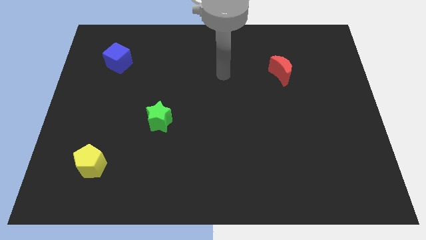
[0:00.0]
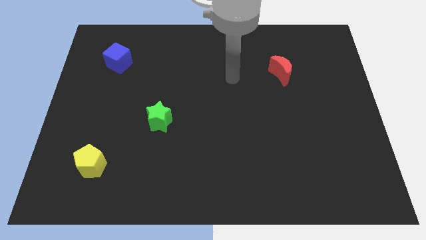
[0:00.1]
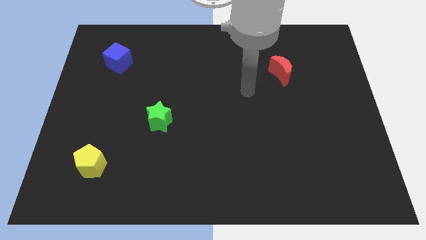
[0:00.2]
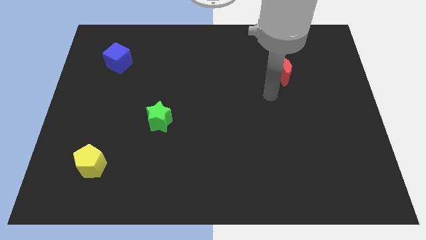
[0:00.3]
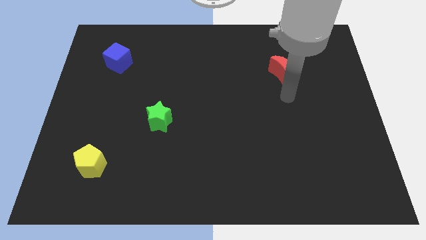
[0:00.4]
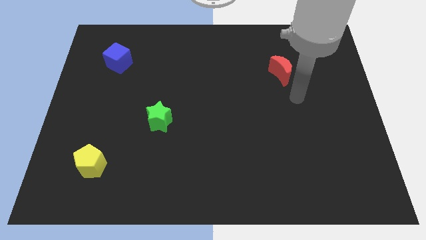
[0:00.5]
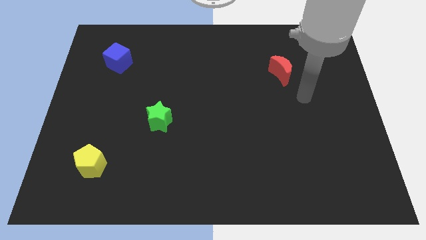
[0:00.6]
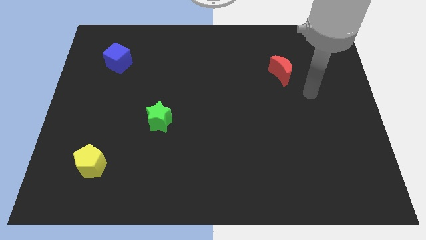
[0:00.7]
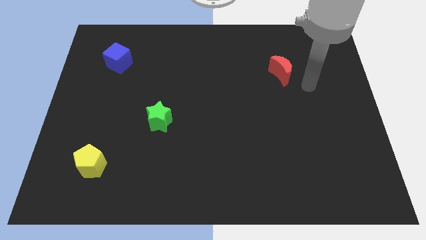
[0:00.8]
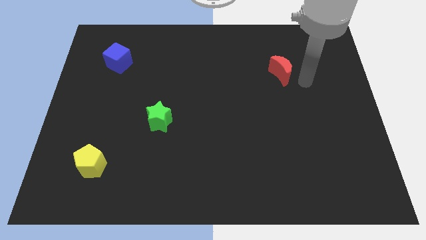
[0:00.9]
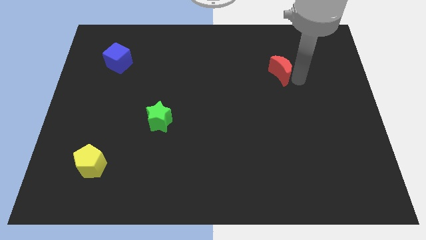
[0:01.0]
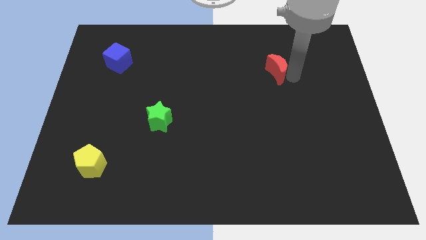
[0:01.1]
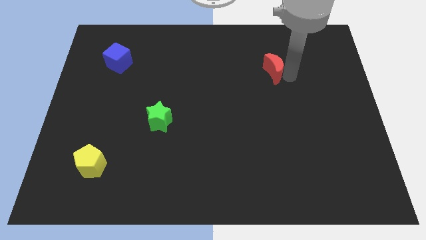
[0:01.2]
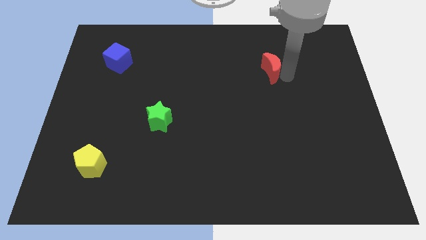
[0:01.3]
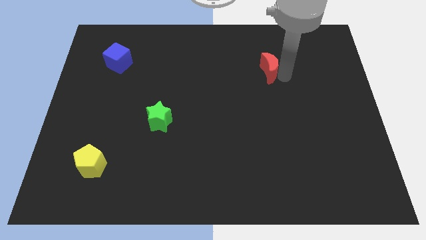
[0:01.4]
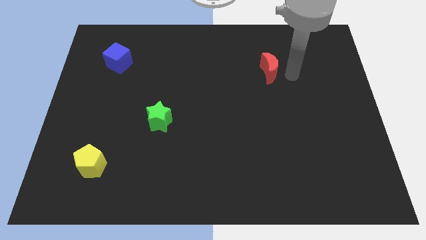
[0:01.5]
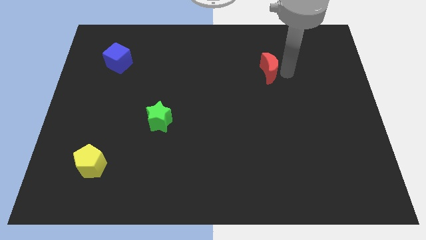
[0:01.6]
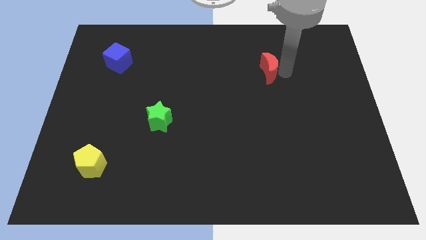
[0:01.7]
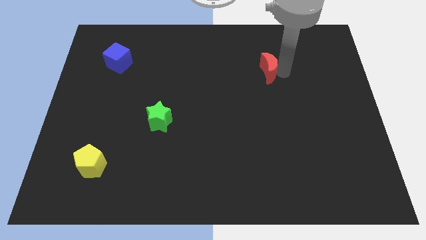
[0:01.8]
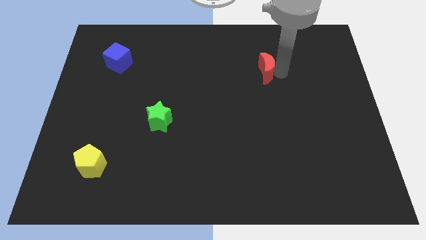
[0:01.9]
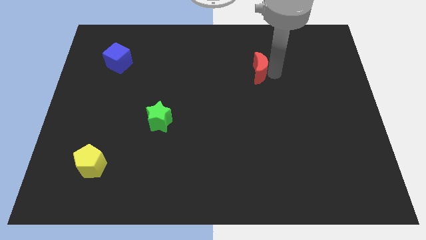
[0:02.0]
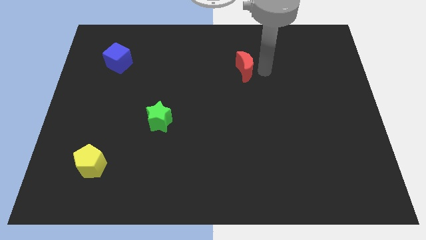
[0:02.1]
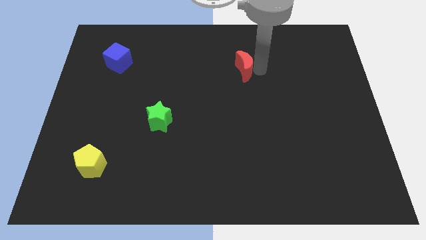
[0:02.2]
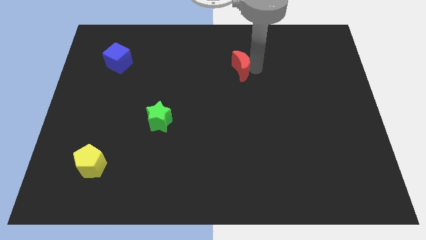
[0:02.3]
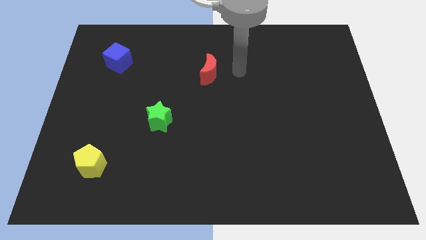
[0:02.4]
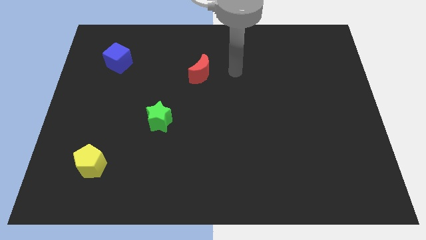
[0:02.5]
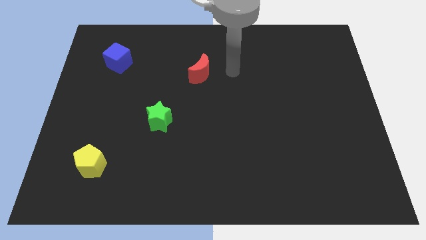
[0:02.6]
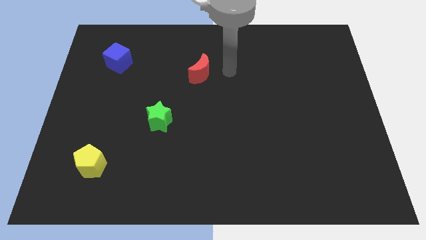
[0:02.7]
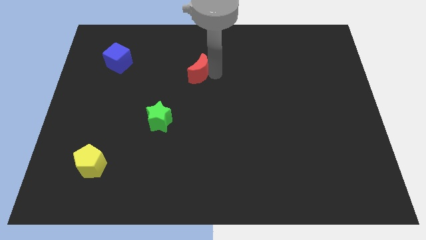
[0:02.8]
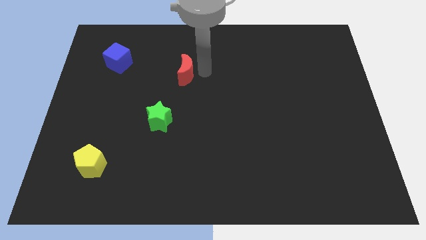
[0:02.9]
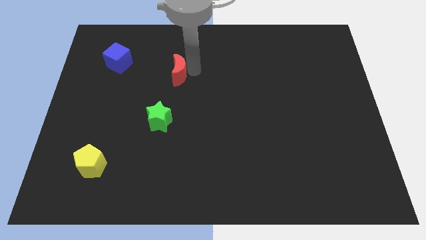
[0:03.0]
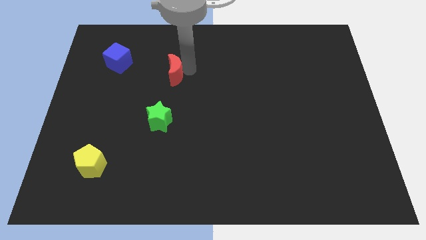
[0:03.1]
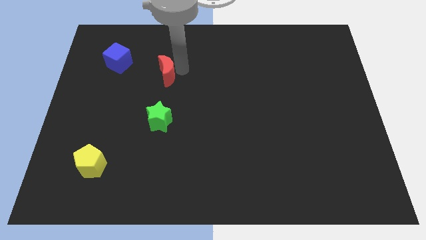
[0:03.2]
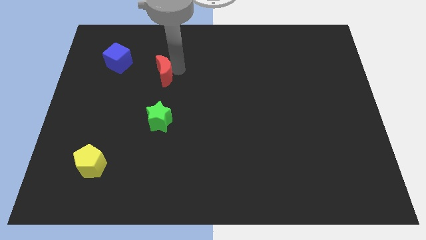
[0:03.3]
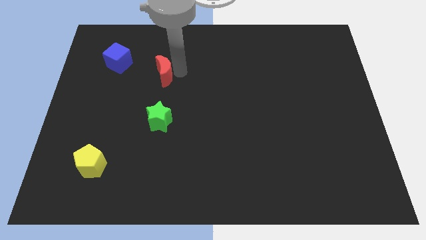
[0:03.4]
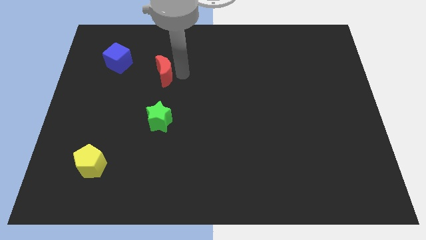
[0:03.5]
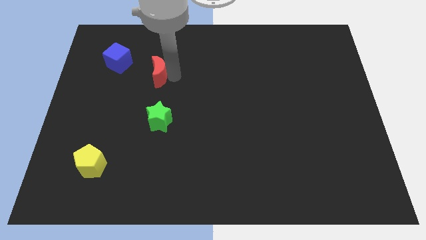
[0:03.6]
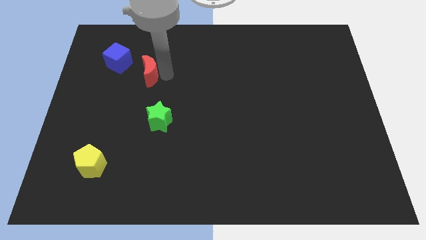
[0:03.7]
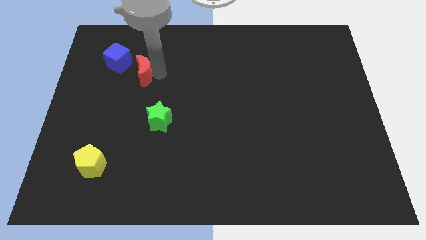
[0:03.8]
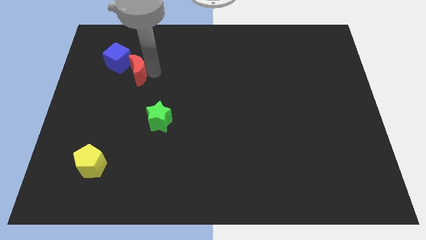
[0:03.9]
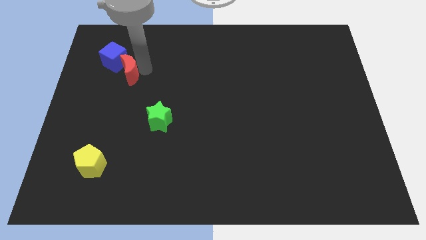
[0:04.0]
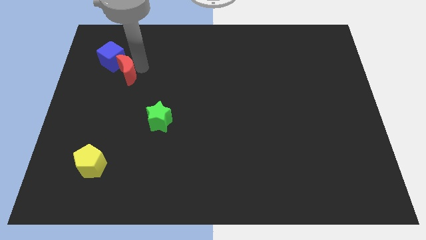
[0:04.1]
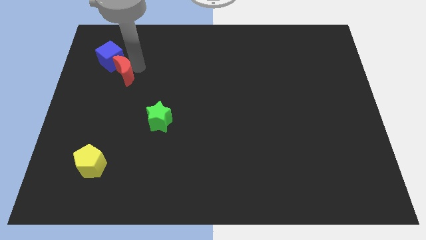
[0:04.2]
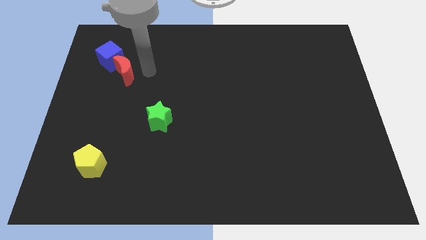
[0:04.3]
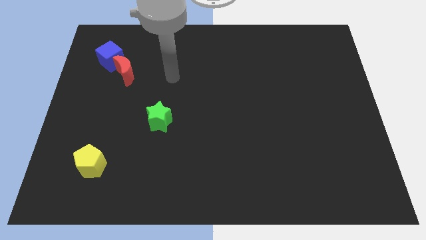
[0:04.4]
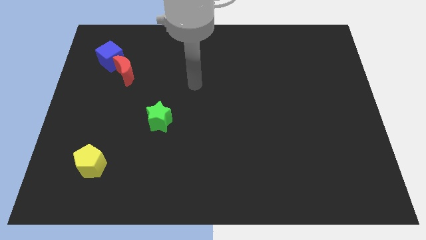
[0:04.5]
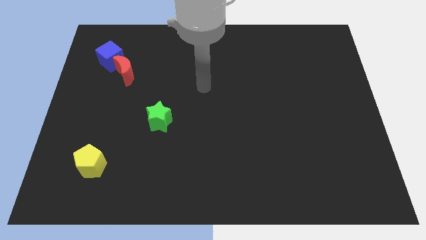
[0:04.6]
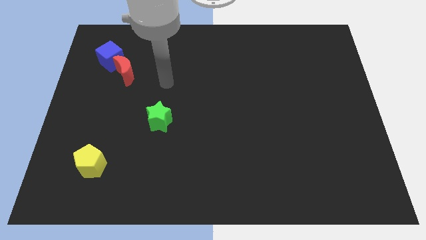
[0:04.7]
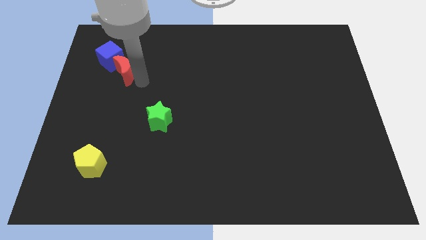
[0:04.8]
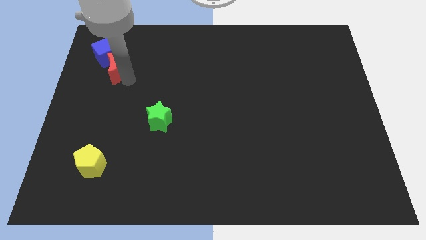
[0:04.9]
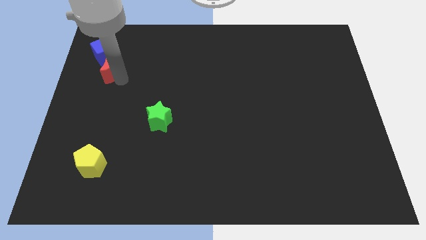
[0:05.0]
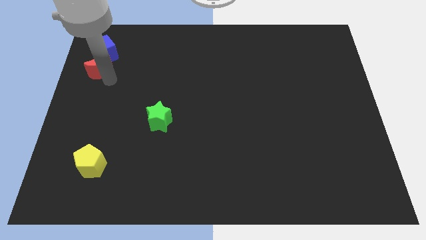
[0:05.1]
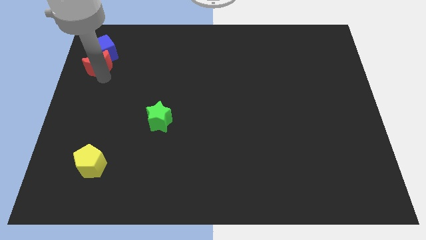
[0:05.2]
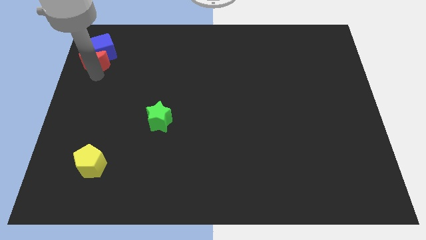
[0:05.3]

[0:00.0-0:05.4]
slide the moon close to the blue block

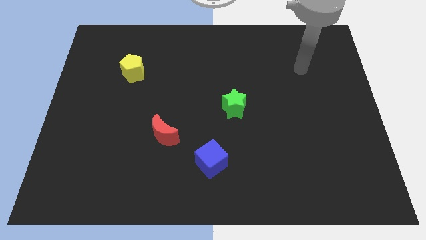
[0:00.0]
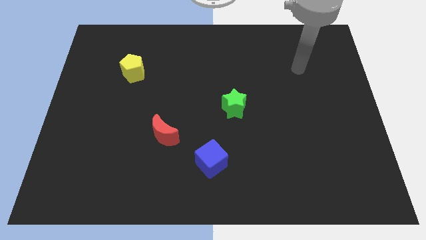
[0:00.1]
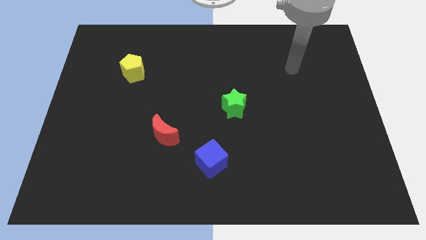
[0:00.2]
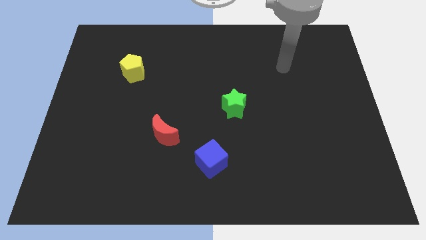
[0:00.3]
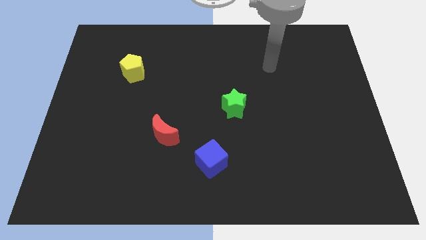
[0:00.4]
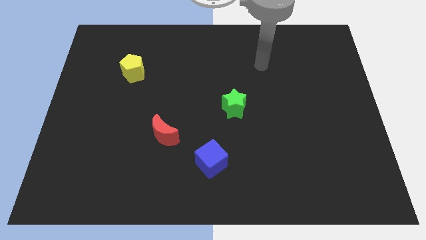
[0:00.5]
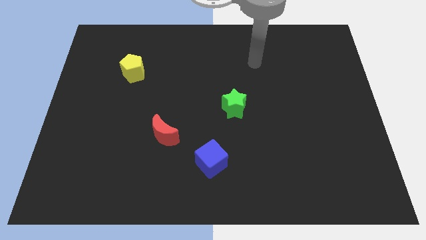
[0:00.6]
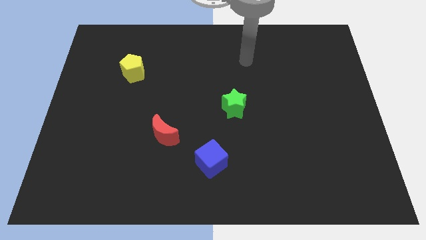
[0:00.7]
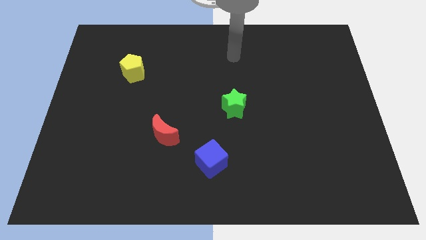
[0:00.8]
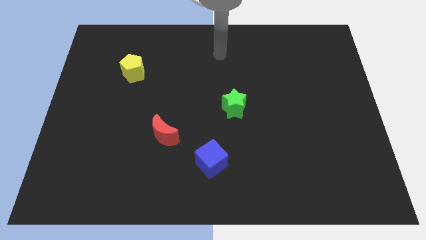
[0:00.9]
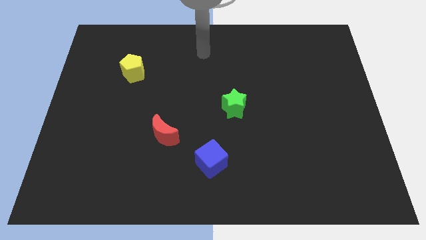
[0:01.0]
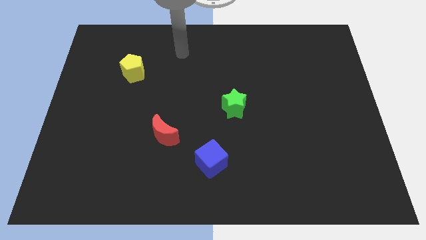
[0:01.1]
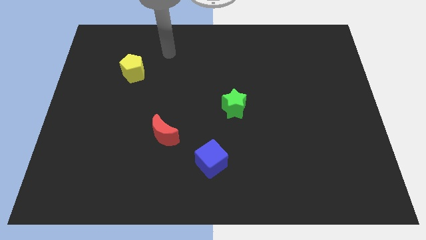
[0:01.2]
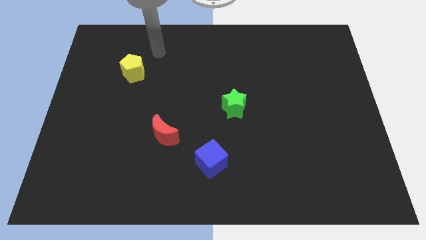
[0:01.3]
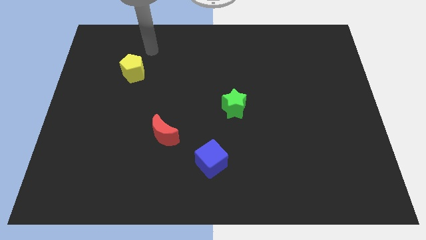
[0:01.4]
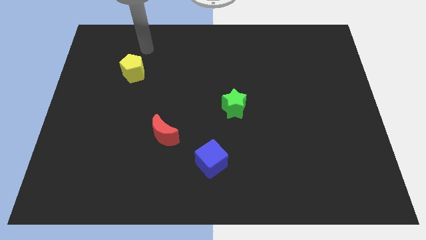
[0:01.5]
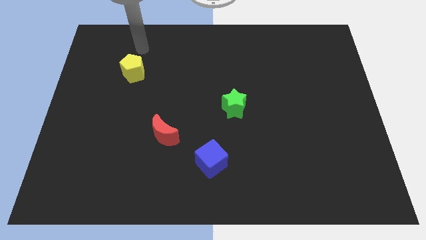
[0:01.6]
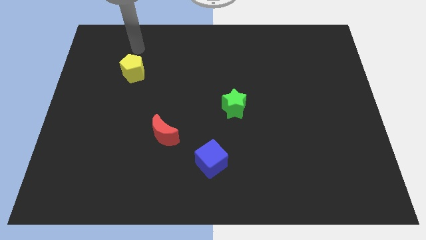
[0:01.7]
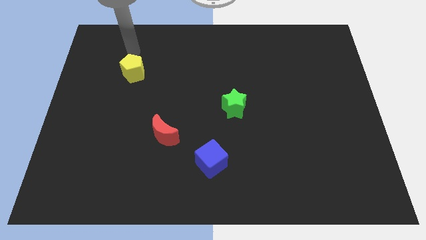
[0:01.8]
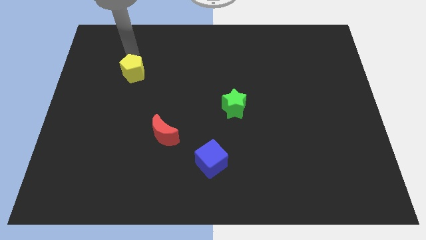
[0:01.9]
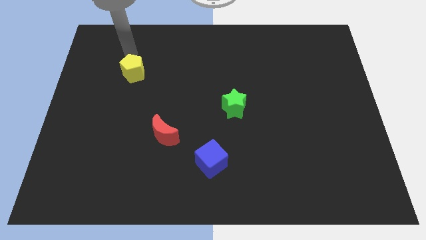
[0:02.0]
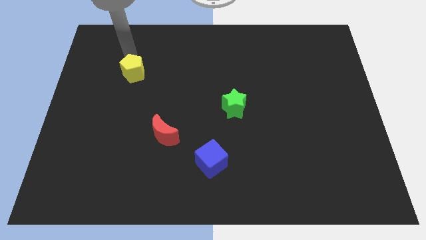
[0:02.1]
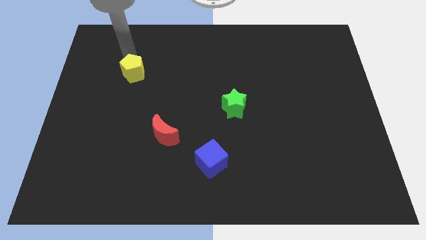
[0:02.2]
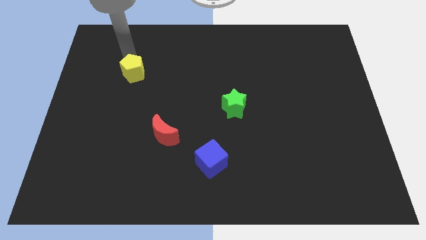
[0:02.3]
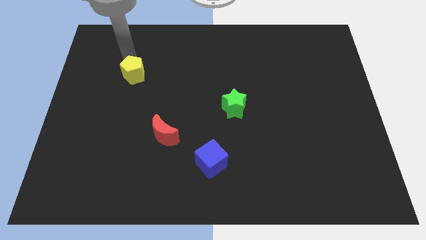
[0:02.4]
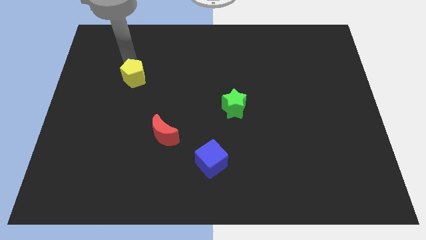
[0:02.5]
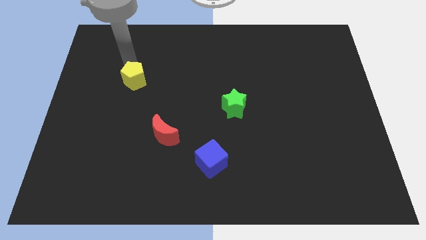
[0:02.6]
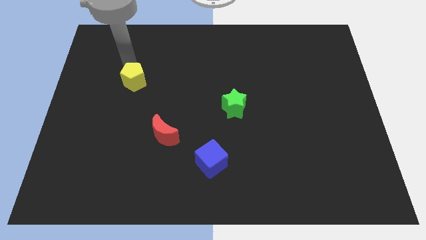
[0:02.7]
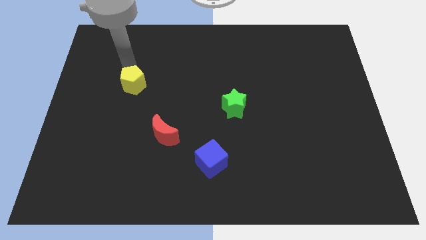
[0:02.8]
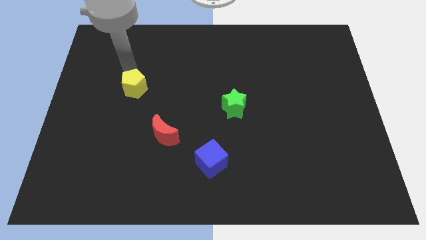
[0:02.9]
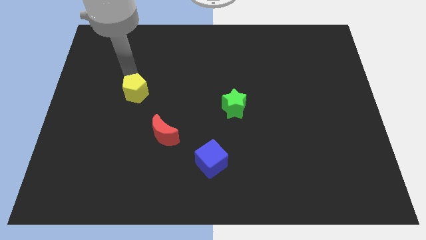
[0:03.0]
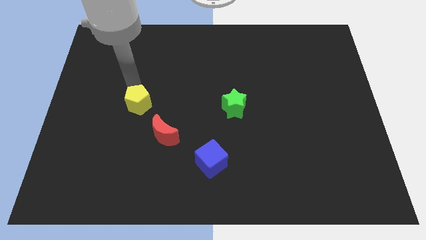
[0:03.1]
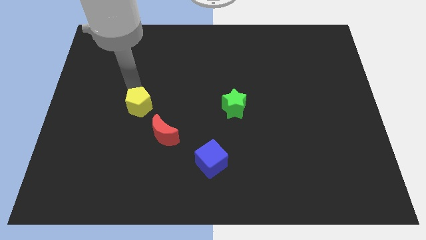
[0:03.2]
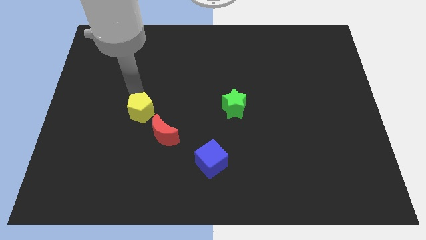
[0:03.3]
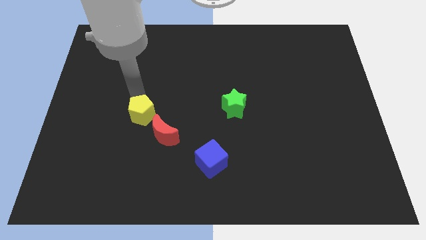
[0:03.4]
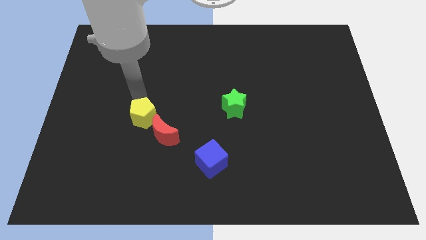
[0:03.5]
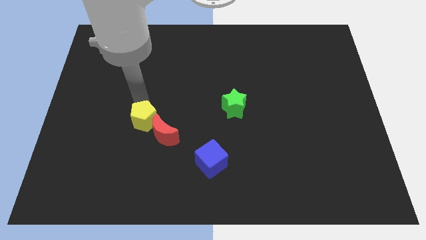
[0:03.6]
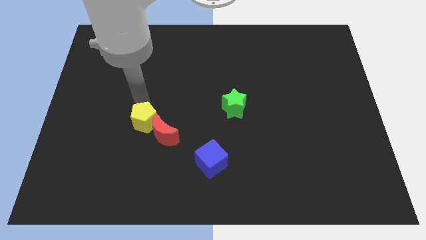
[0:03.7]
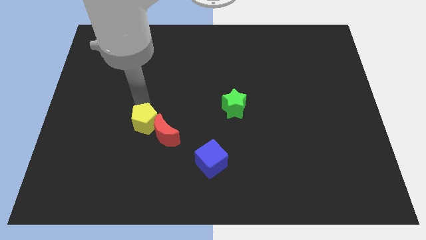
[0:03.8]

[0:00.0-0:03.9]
push the yellow pentagon next to the red block
